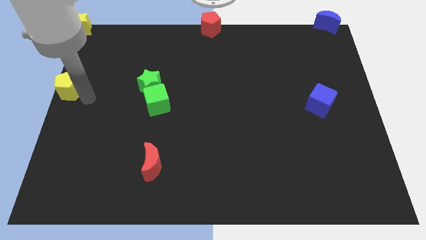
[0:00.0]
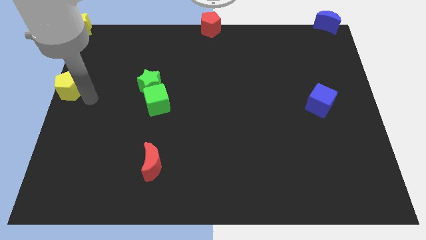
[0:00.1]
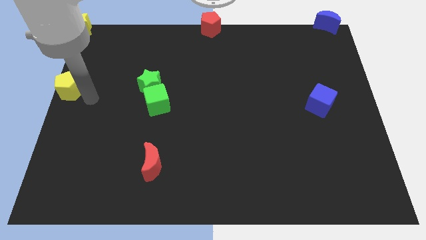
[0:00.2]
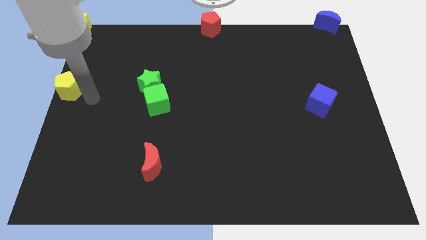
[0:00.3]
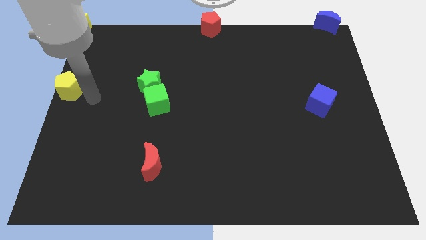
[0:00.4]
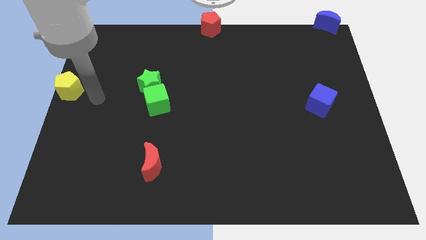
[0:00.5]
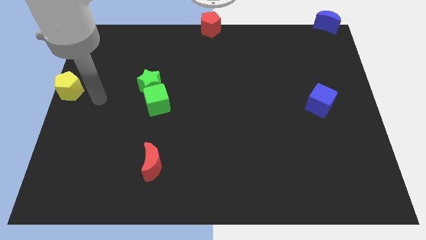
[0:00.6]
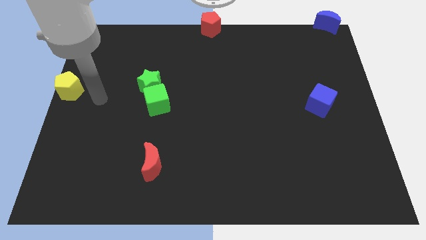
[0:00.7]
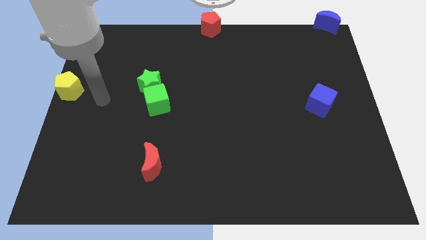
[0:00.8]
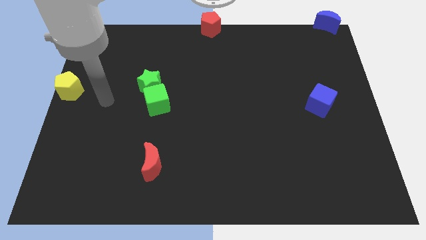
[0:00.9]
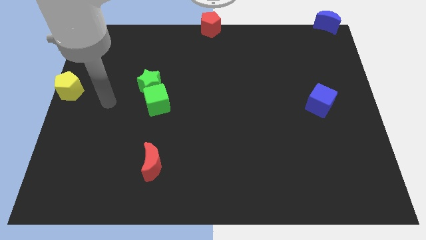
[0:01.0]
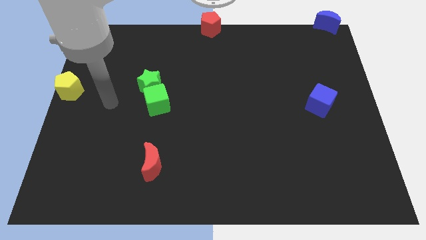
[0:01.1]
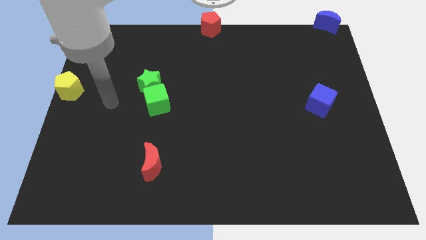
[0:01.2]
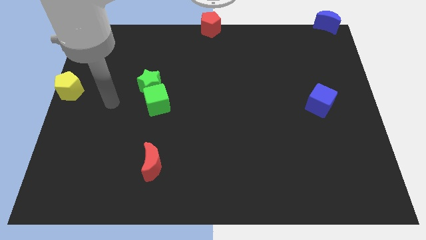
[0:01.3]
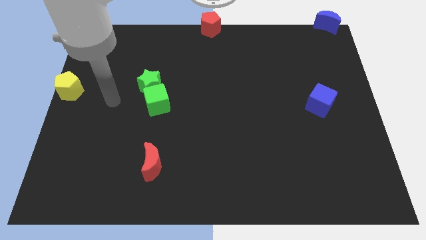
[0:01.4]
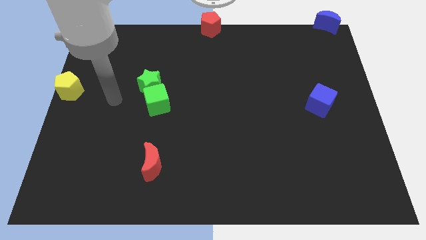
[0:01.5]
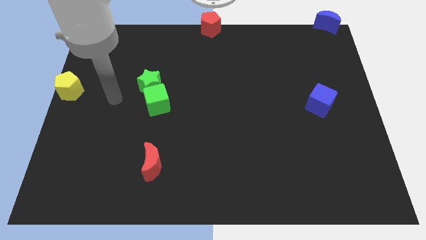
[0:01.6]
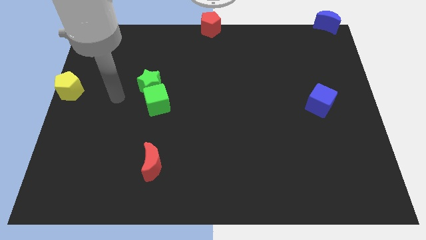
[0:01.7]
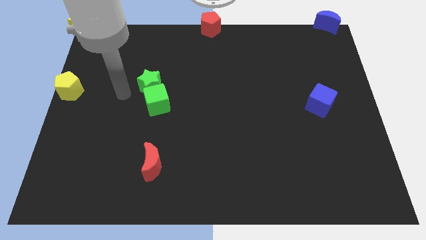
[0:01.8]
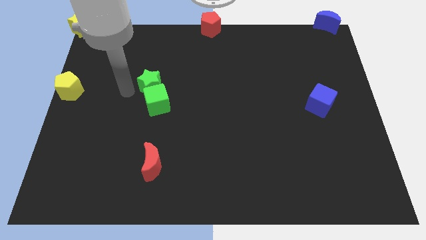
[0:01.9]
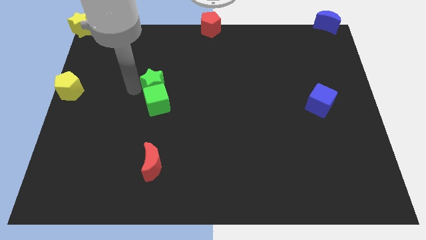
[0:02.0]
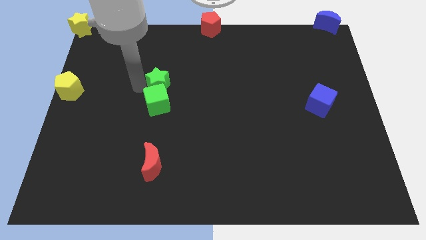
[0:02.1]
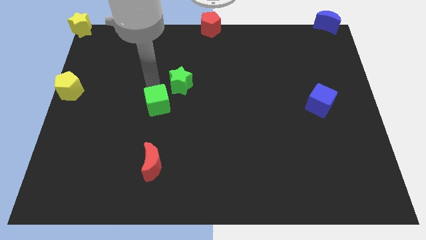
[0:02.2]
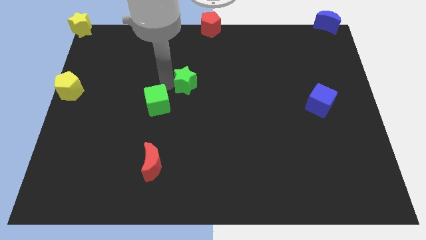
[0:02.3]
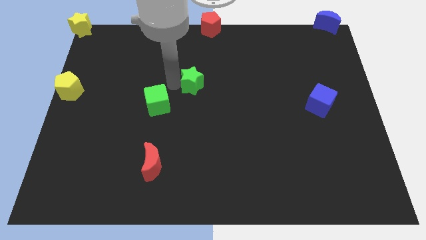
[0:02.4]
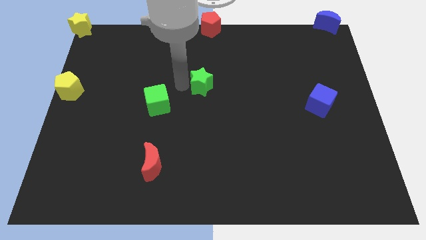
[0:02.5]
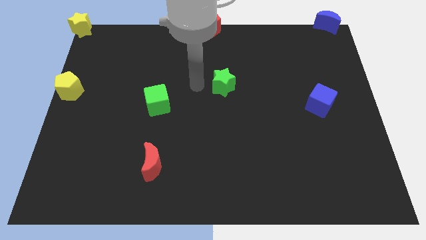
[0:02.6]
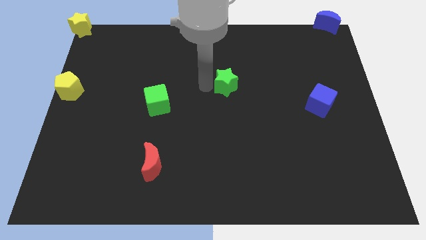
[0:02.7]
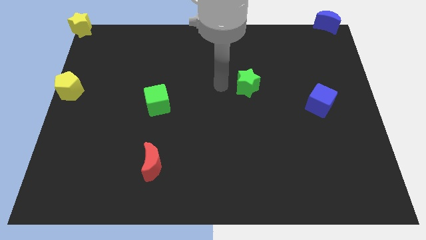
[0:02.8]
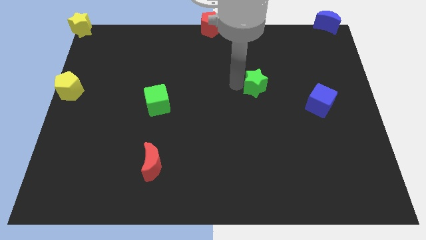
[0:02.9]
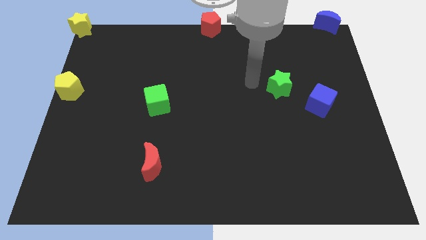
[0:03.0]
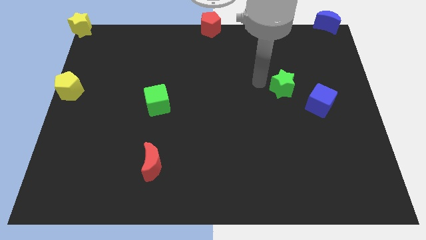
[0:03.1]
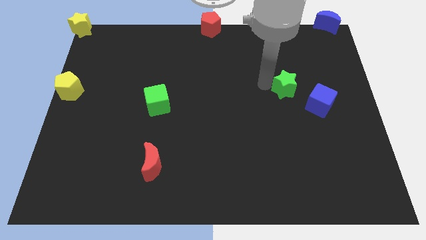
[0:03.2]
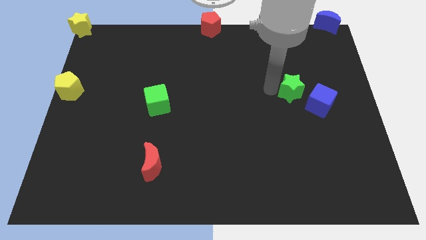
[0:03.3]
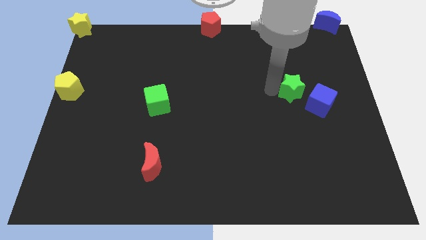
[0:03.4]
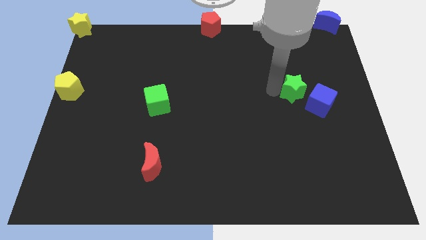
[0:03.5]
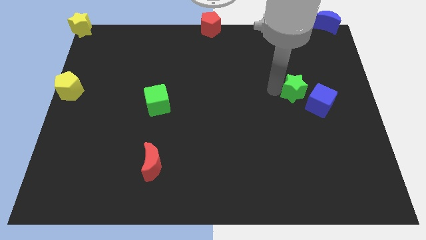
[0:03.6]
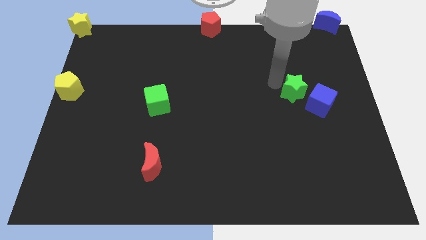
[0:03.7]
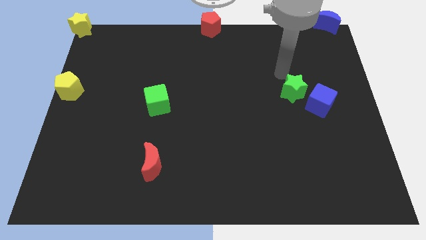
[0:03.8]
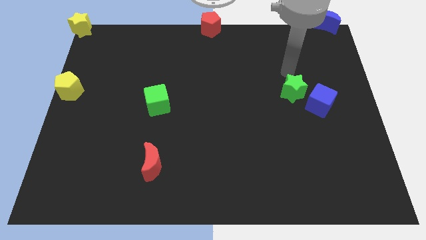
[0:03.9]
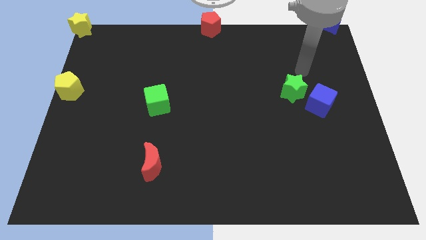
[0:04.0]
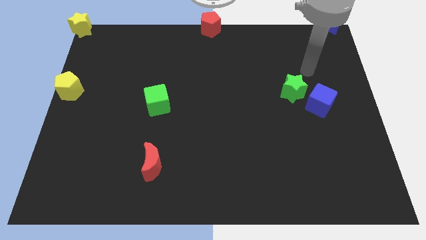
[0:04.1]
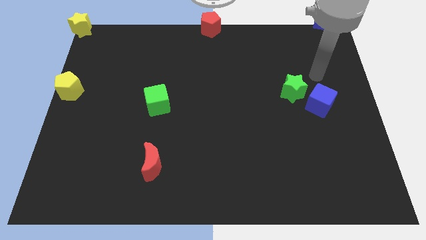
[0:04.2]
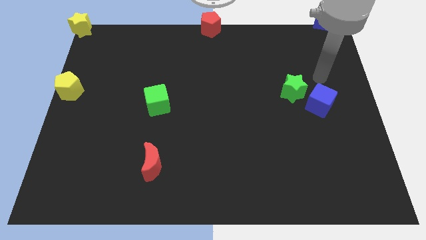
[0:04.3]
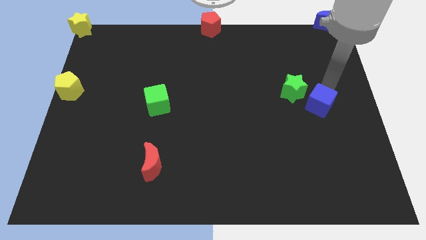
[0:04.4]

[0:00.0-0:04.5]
move the green star to the horizontal right of the green cube

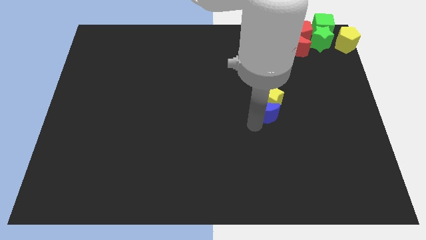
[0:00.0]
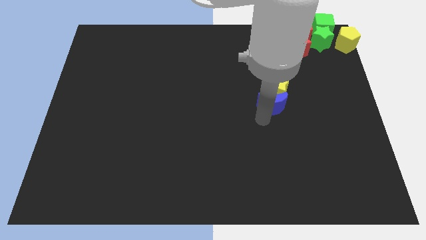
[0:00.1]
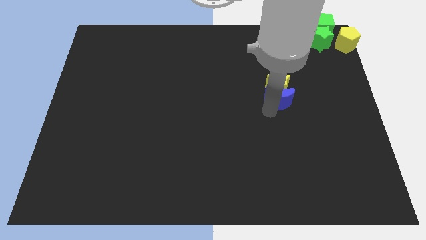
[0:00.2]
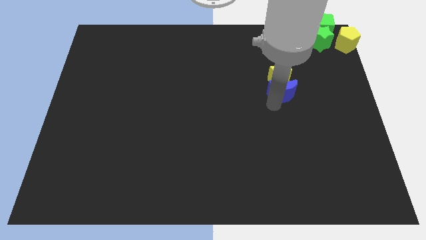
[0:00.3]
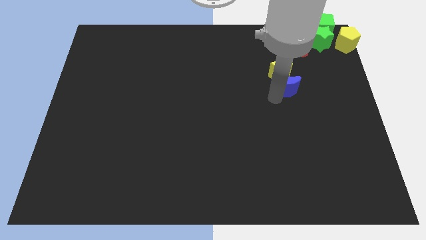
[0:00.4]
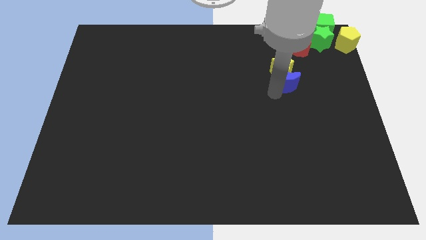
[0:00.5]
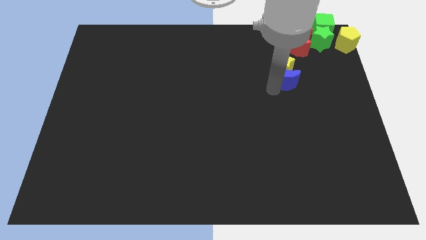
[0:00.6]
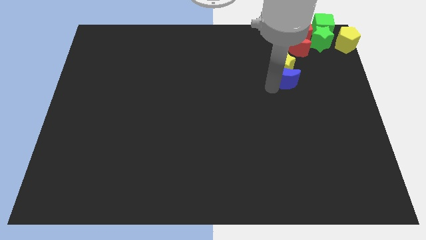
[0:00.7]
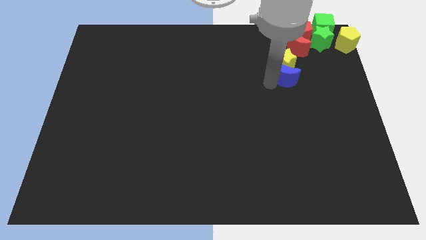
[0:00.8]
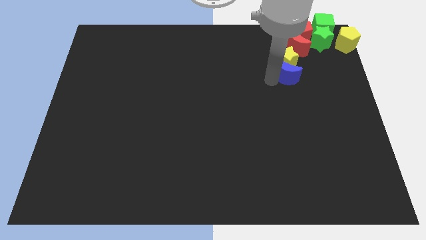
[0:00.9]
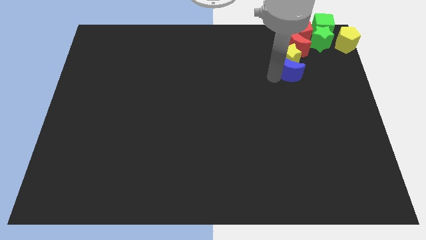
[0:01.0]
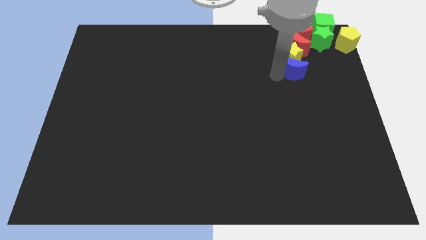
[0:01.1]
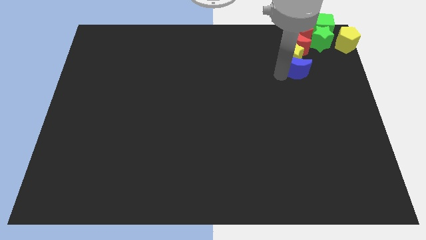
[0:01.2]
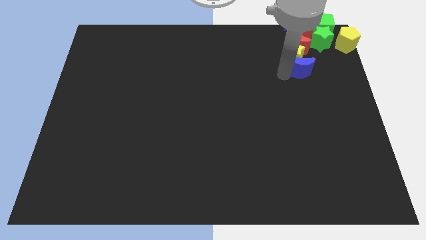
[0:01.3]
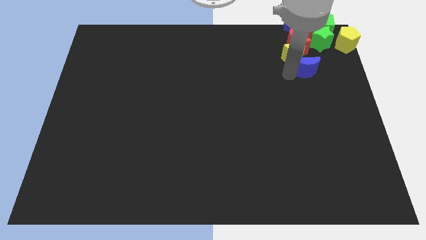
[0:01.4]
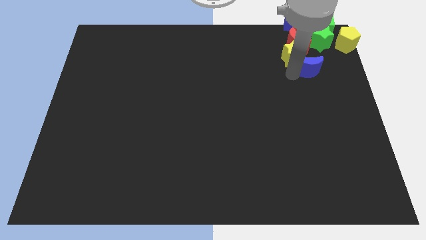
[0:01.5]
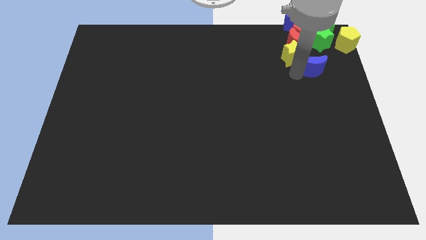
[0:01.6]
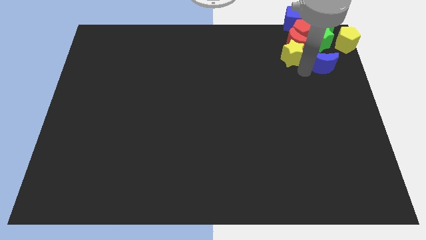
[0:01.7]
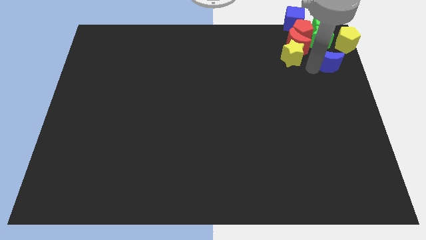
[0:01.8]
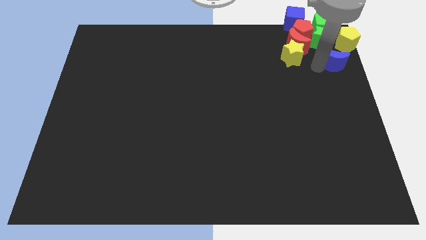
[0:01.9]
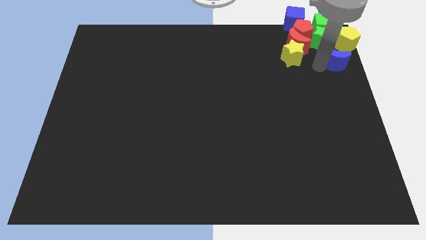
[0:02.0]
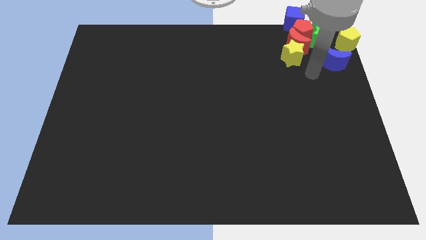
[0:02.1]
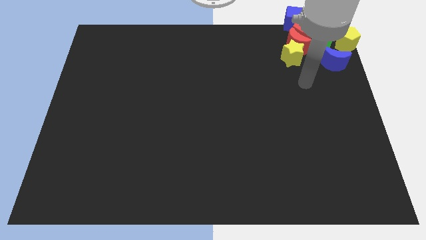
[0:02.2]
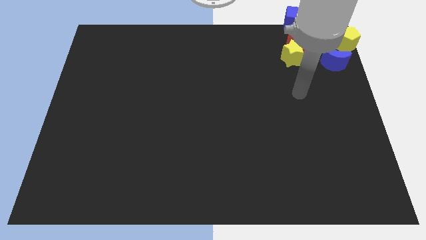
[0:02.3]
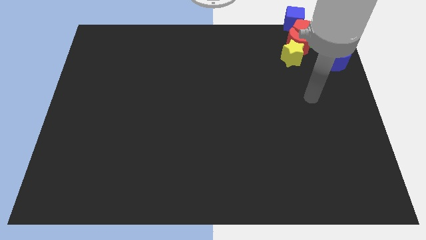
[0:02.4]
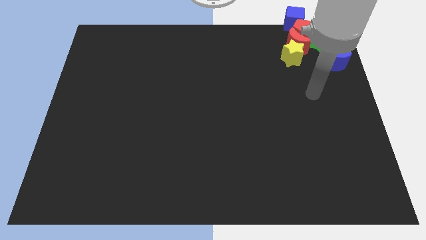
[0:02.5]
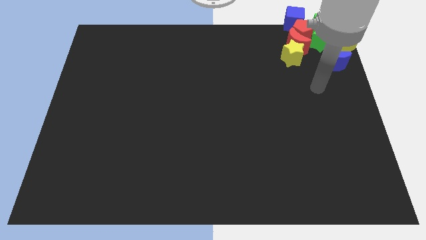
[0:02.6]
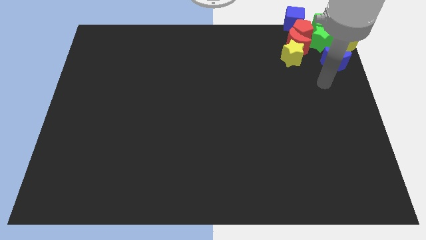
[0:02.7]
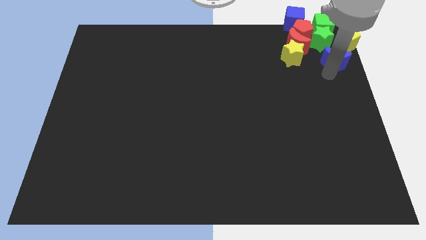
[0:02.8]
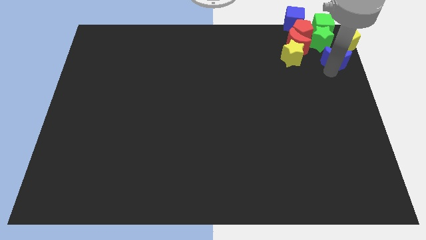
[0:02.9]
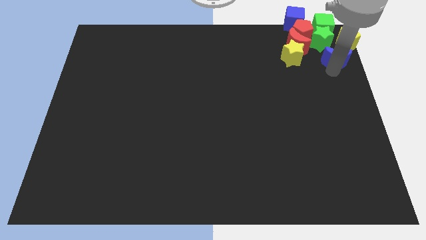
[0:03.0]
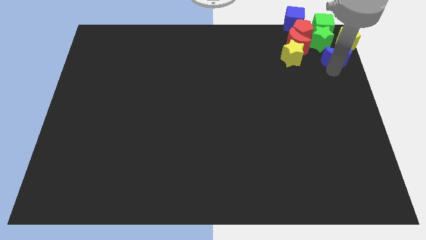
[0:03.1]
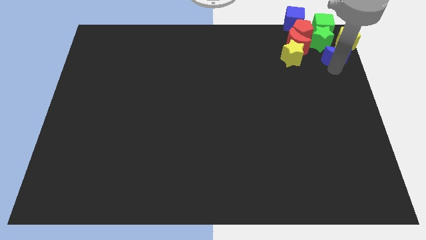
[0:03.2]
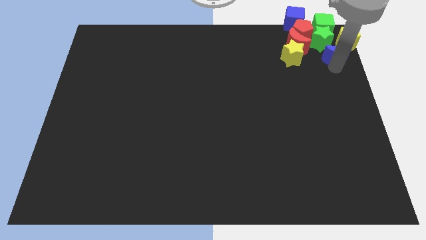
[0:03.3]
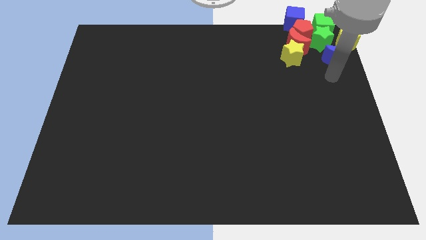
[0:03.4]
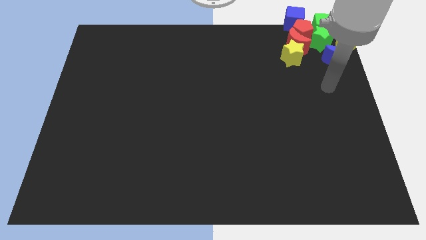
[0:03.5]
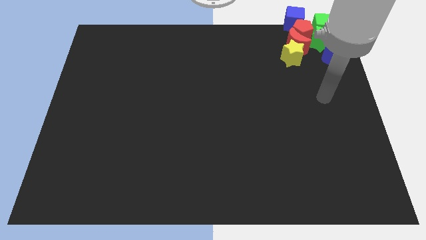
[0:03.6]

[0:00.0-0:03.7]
move the blue crescent into the group of blocks

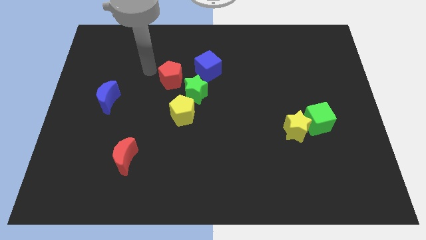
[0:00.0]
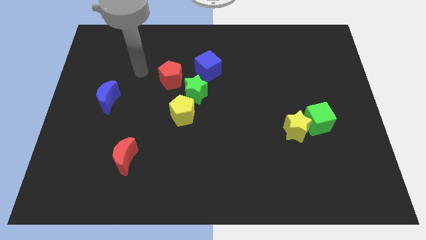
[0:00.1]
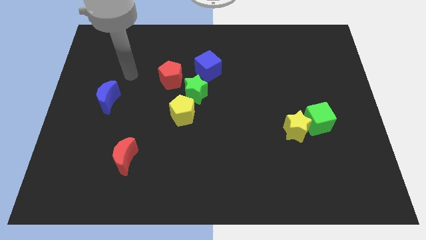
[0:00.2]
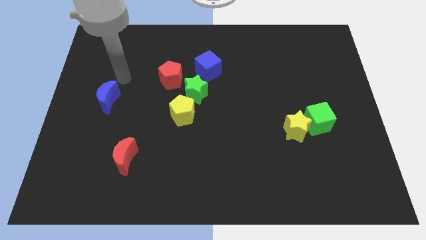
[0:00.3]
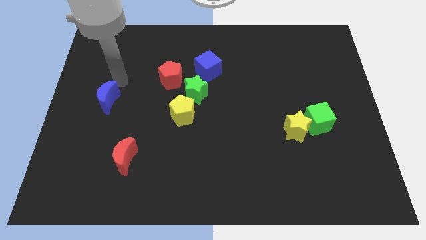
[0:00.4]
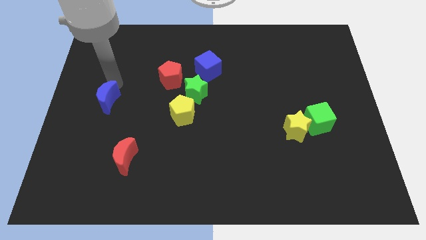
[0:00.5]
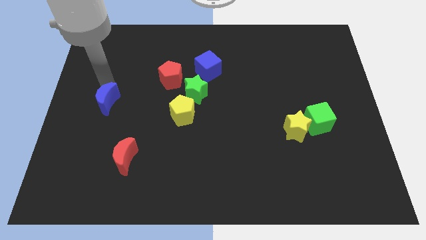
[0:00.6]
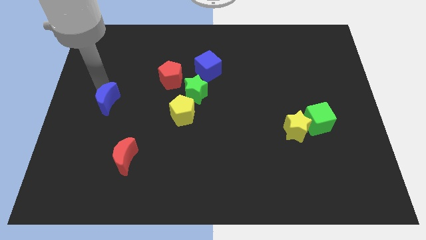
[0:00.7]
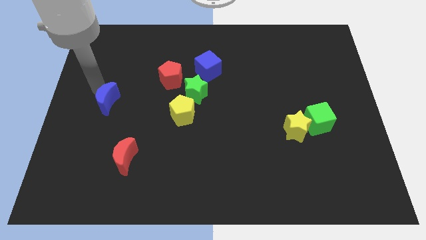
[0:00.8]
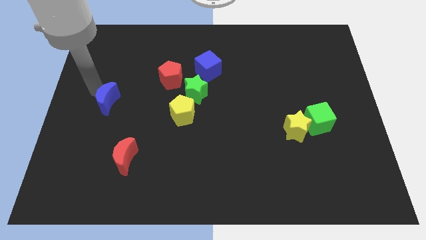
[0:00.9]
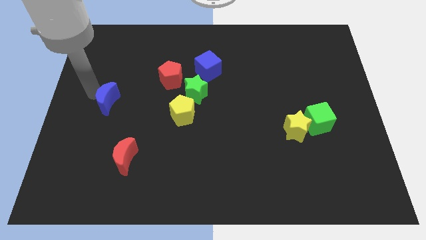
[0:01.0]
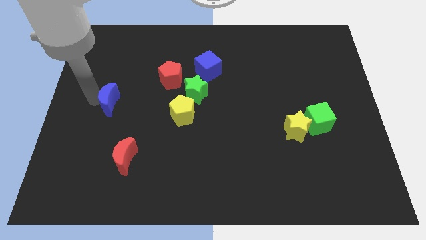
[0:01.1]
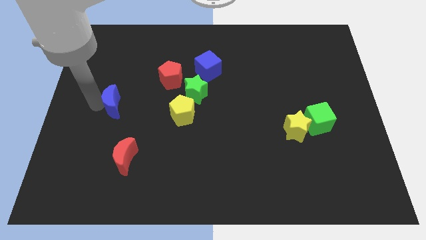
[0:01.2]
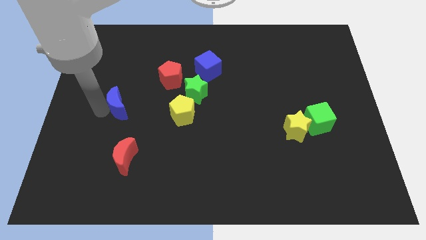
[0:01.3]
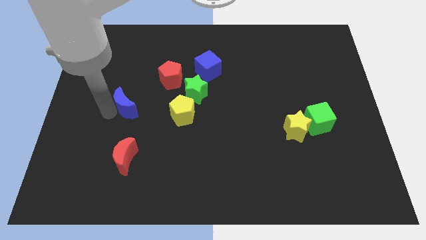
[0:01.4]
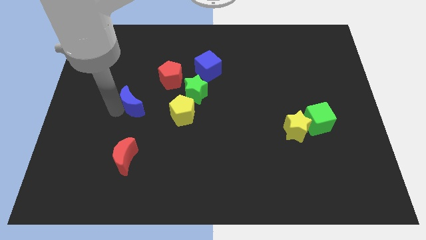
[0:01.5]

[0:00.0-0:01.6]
push the blue moon slightly towards the left of the yellow pentagon
